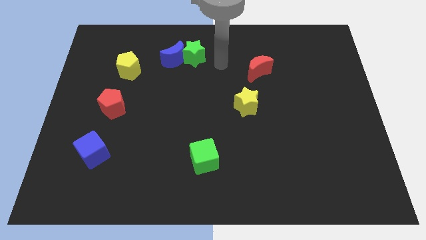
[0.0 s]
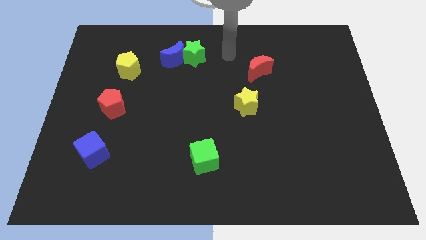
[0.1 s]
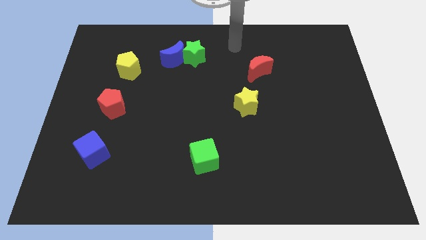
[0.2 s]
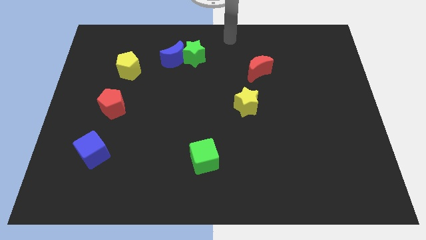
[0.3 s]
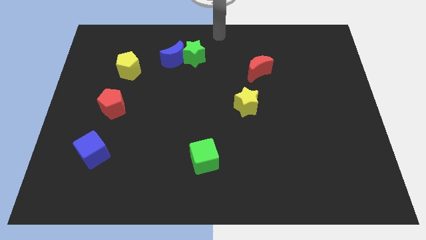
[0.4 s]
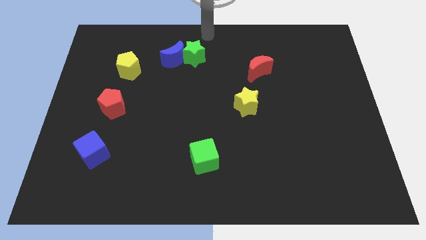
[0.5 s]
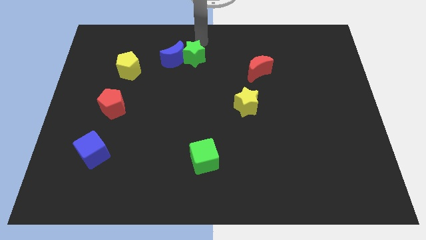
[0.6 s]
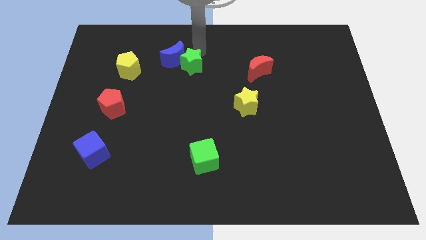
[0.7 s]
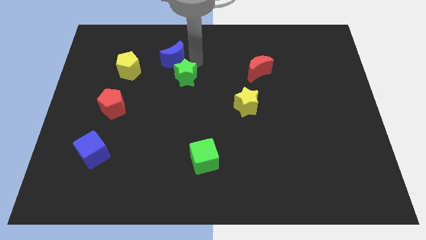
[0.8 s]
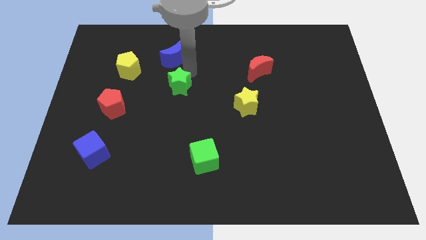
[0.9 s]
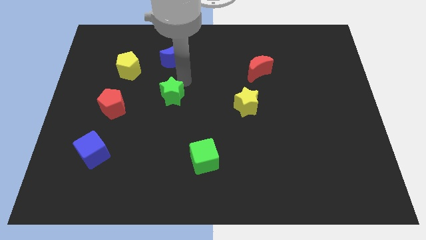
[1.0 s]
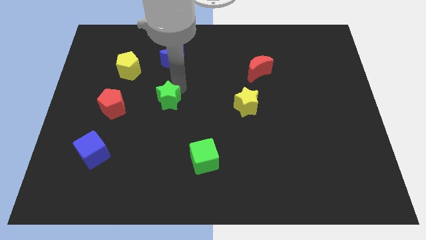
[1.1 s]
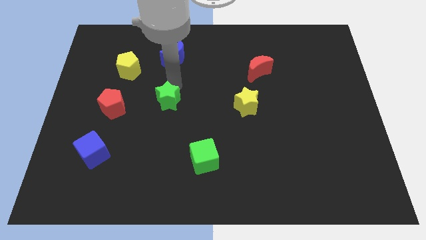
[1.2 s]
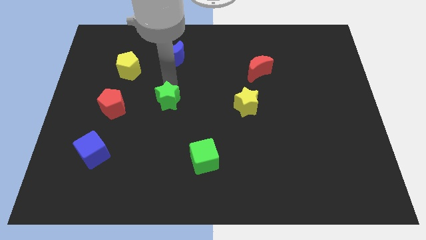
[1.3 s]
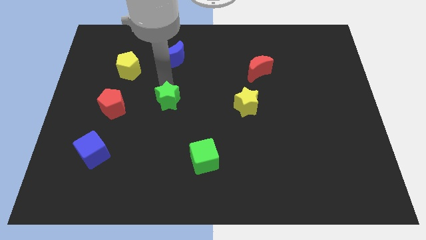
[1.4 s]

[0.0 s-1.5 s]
push the green star downward

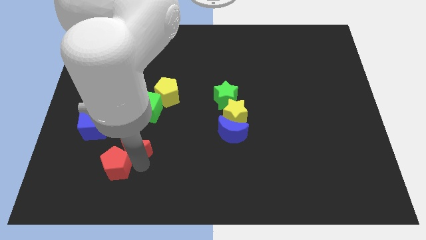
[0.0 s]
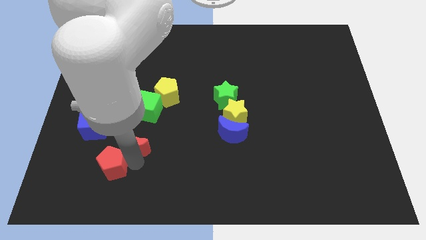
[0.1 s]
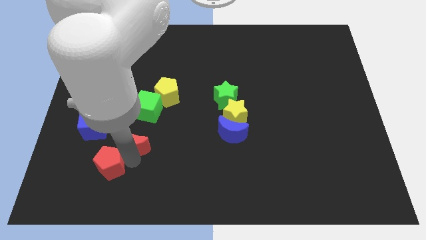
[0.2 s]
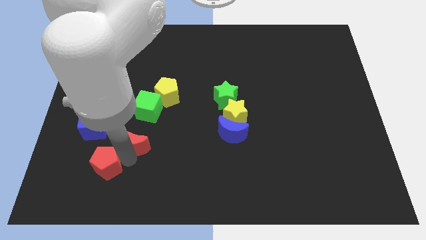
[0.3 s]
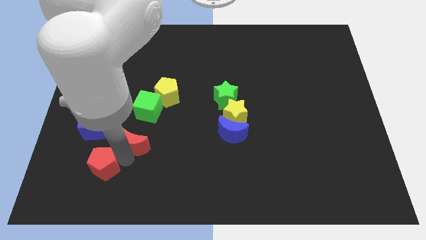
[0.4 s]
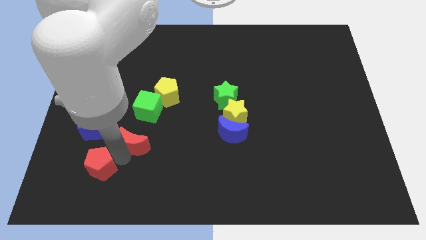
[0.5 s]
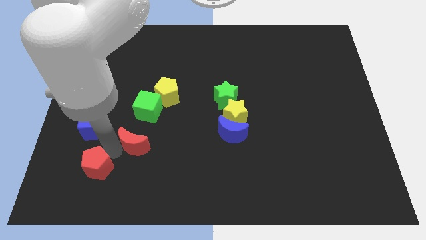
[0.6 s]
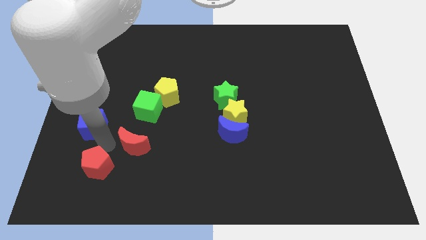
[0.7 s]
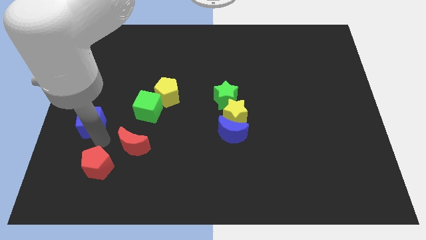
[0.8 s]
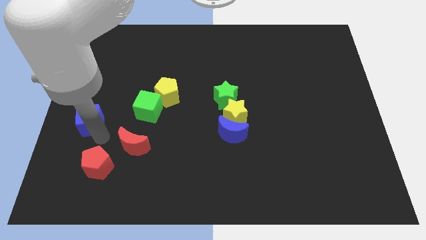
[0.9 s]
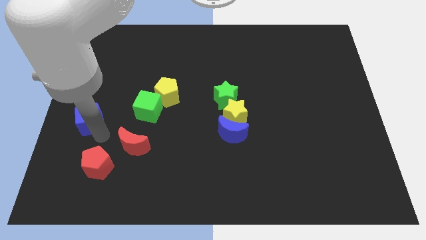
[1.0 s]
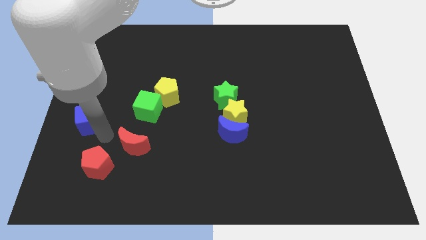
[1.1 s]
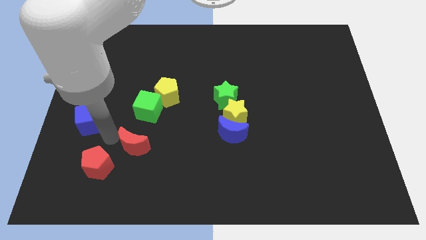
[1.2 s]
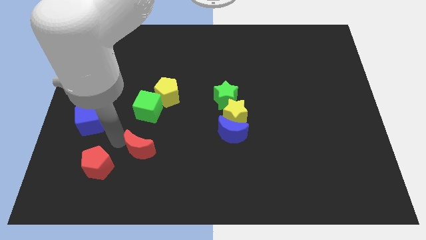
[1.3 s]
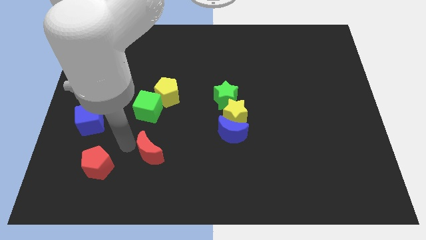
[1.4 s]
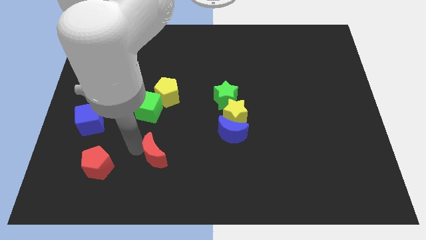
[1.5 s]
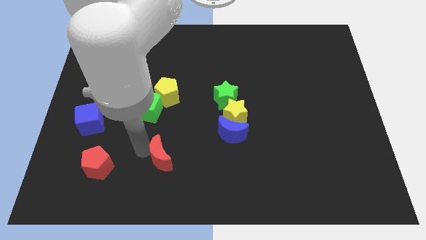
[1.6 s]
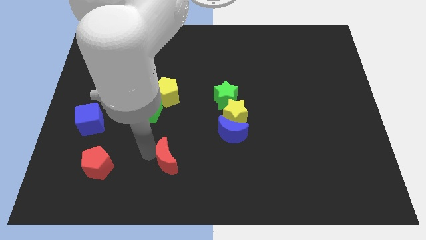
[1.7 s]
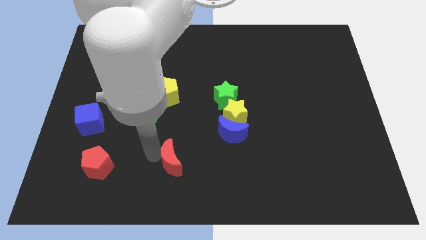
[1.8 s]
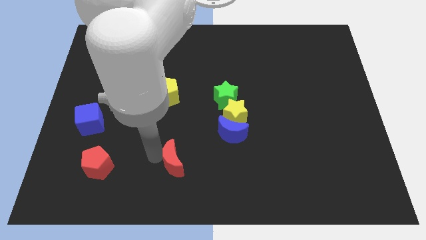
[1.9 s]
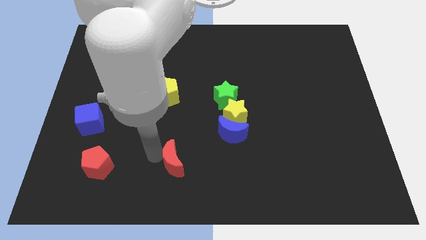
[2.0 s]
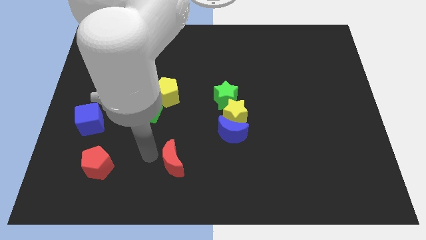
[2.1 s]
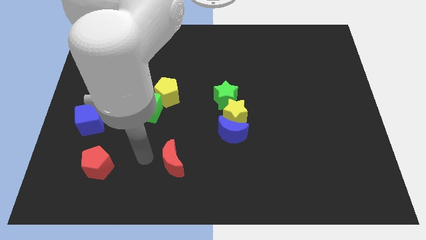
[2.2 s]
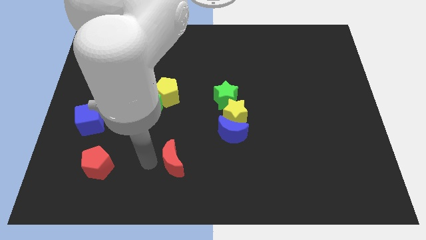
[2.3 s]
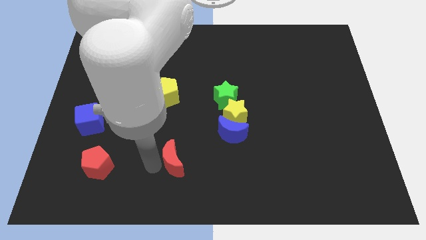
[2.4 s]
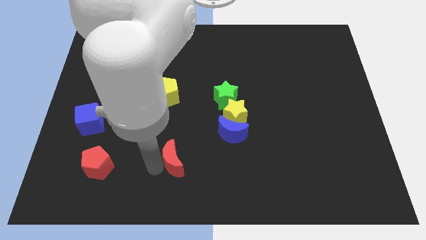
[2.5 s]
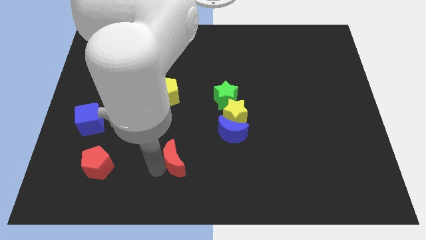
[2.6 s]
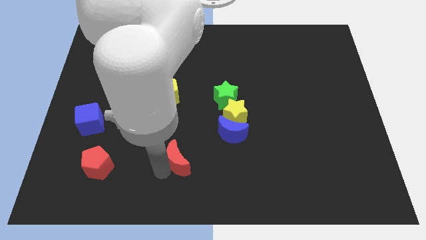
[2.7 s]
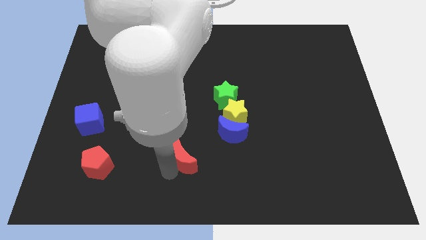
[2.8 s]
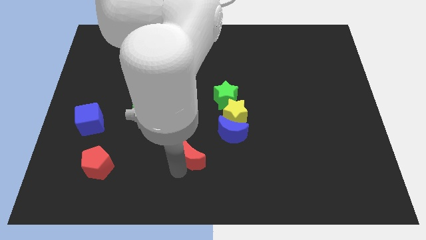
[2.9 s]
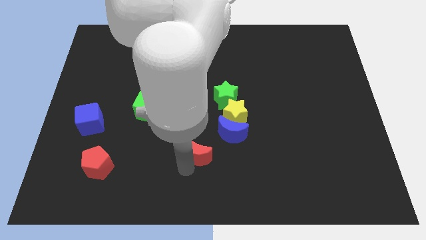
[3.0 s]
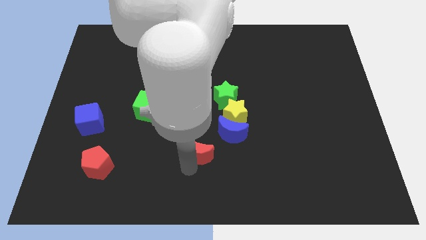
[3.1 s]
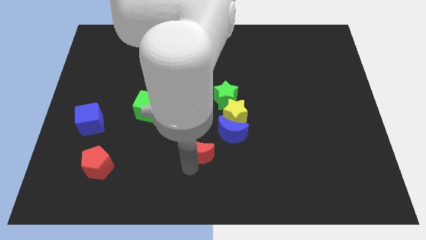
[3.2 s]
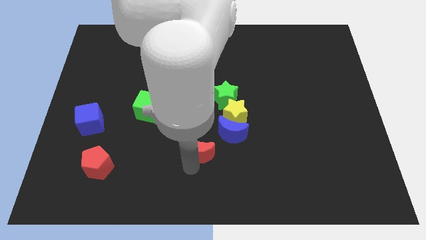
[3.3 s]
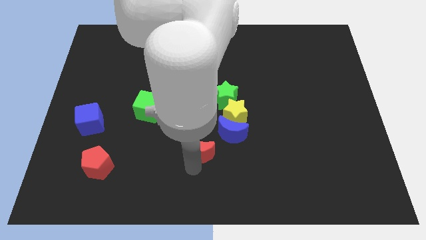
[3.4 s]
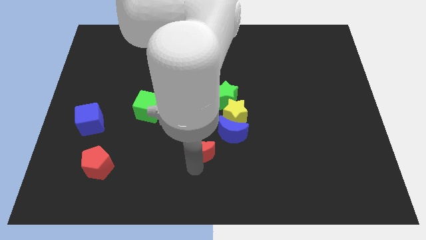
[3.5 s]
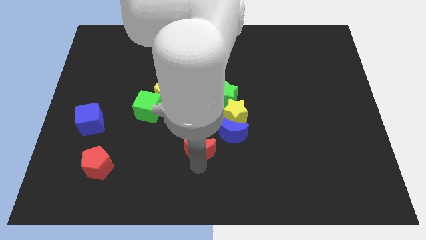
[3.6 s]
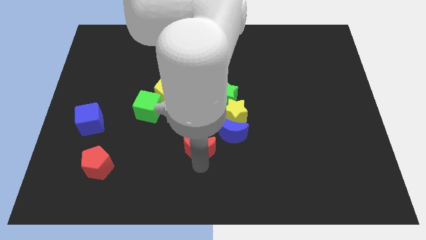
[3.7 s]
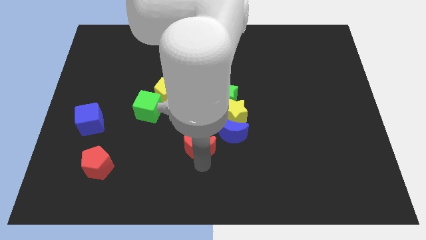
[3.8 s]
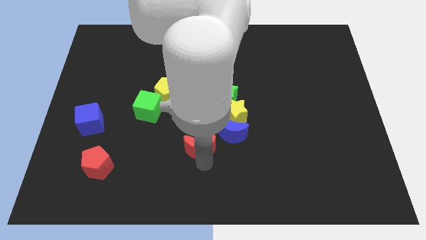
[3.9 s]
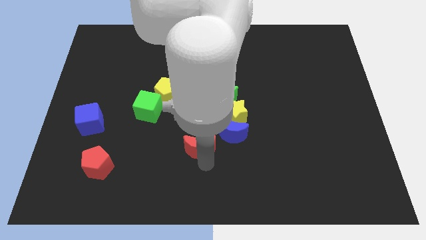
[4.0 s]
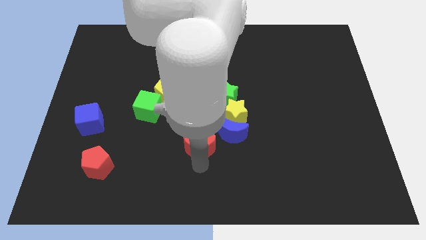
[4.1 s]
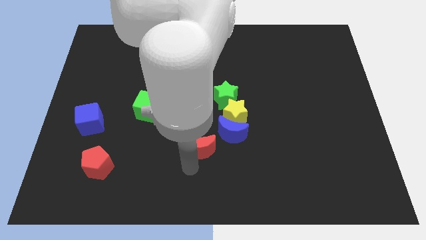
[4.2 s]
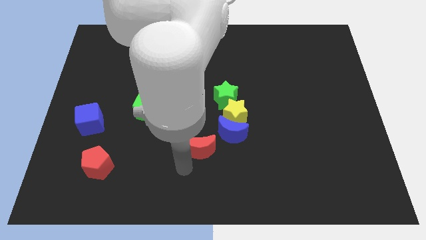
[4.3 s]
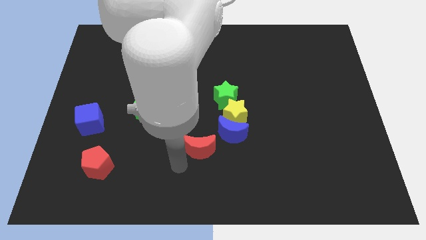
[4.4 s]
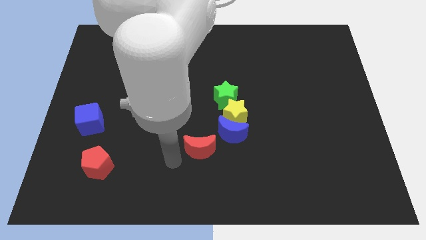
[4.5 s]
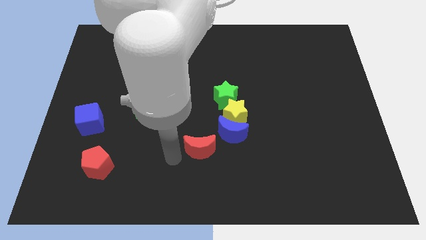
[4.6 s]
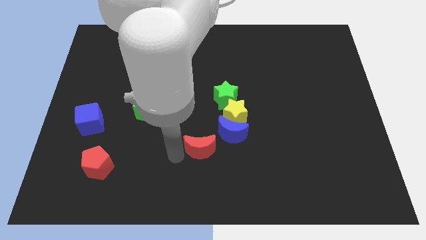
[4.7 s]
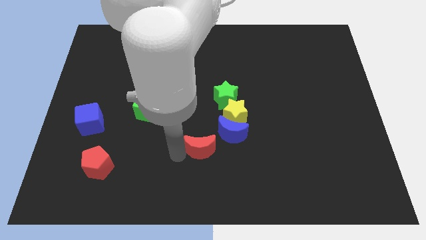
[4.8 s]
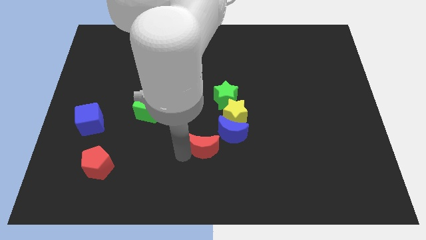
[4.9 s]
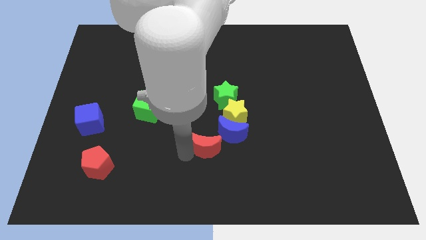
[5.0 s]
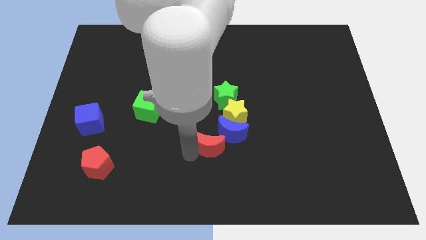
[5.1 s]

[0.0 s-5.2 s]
push the red moon close to the blue moon

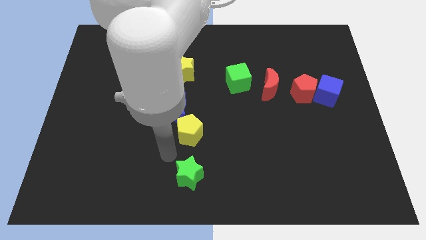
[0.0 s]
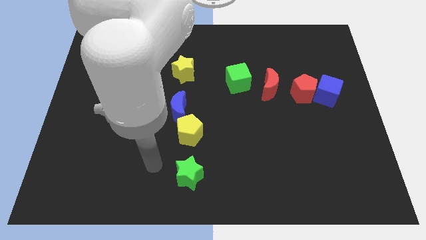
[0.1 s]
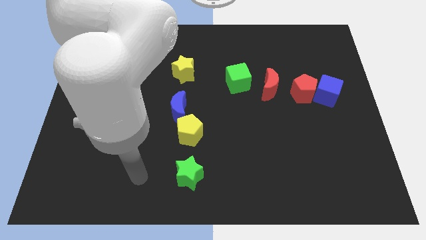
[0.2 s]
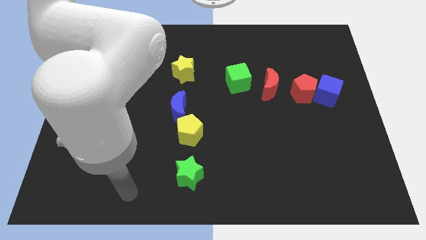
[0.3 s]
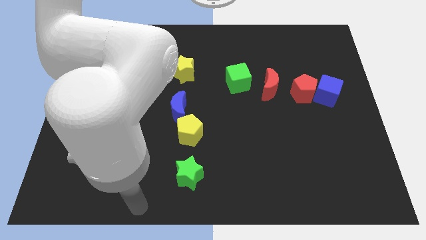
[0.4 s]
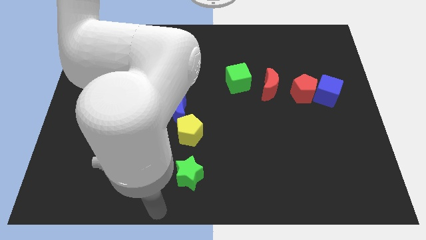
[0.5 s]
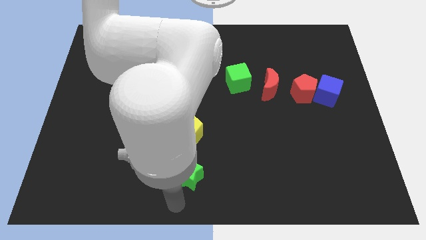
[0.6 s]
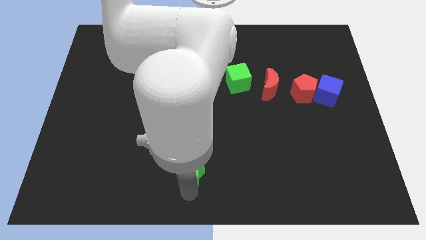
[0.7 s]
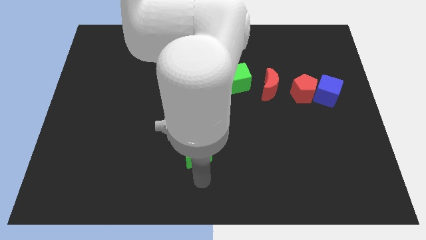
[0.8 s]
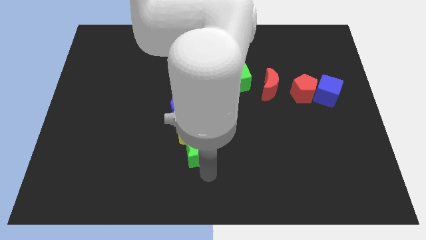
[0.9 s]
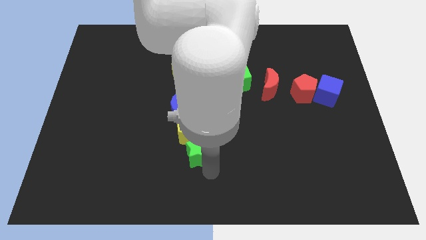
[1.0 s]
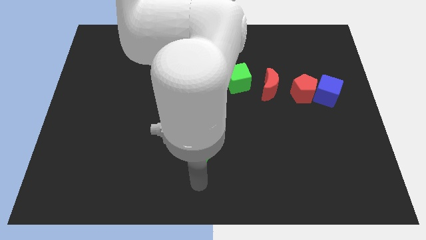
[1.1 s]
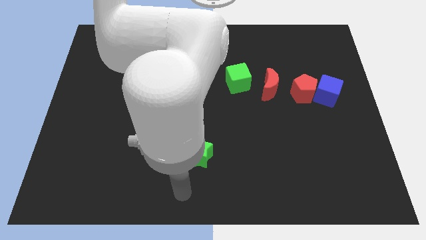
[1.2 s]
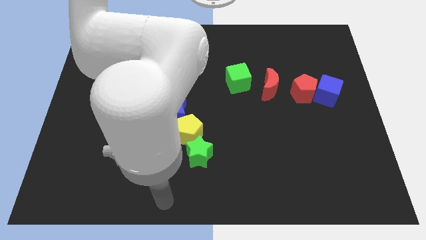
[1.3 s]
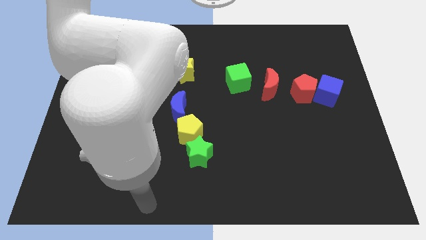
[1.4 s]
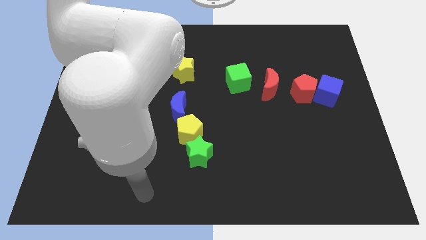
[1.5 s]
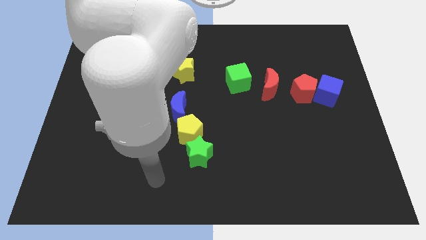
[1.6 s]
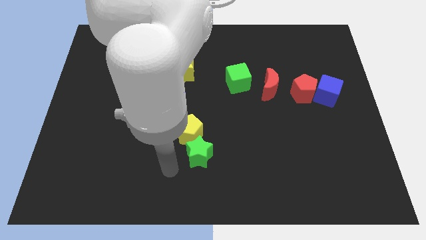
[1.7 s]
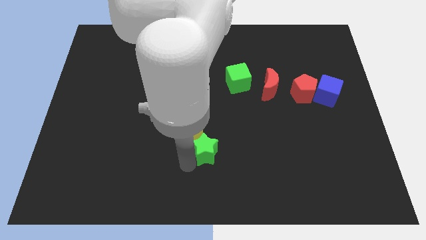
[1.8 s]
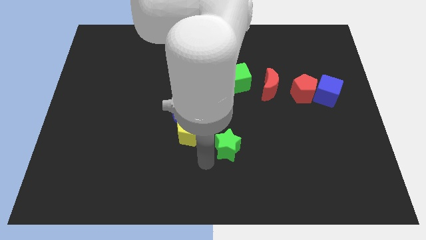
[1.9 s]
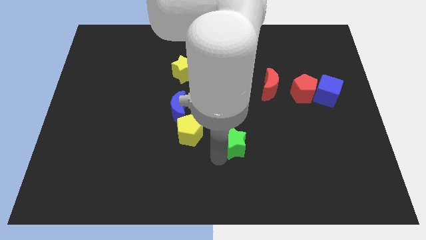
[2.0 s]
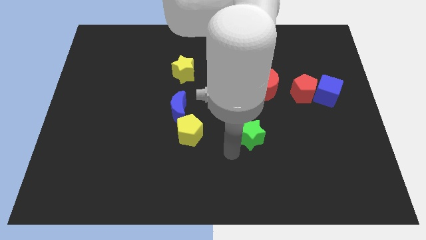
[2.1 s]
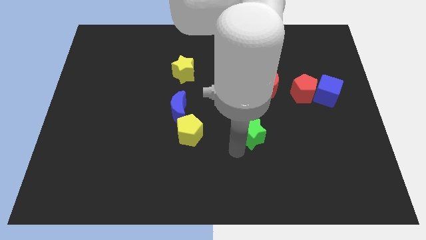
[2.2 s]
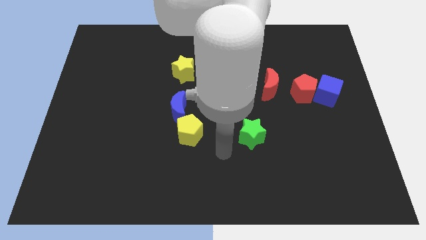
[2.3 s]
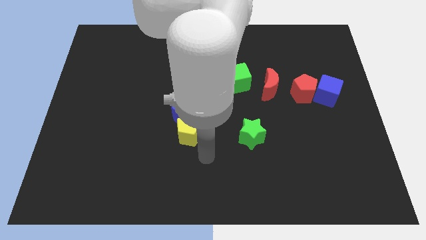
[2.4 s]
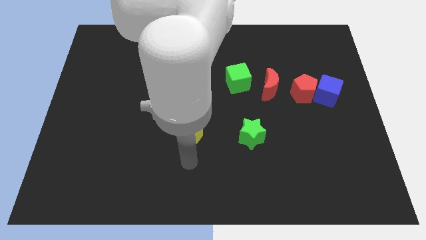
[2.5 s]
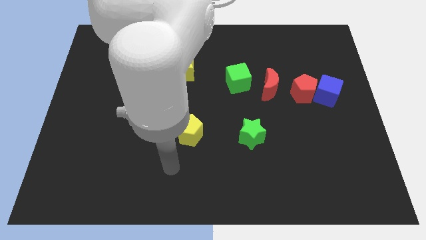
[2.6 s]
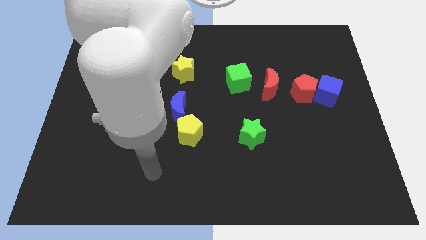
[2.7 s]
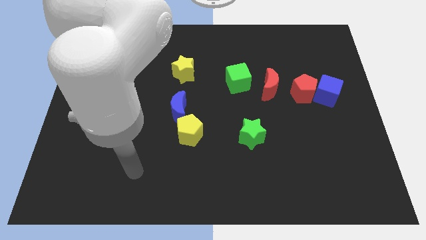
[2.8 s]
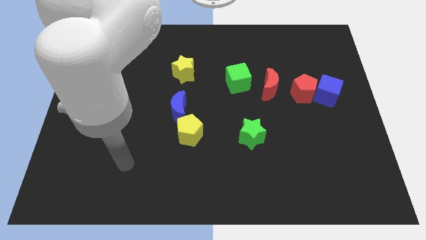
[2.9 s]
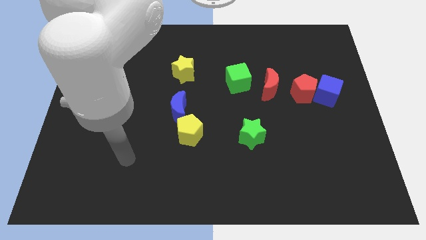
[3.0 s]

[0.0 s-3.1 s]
place the green star horizontally at the right side of the yellow pentagon
